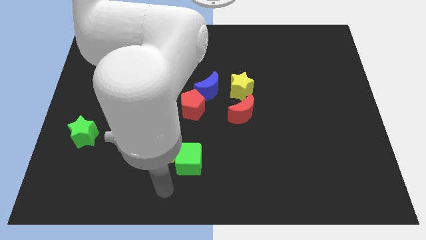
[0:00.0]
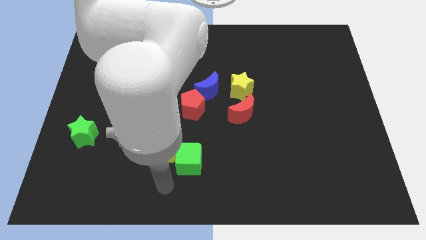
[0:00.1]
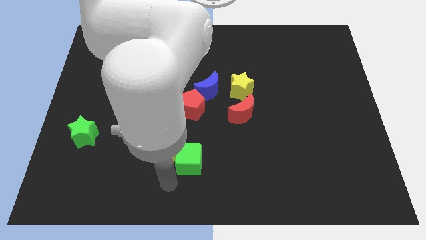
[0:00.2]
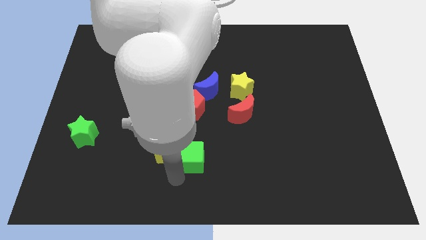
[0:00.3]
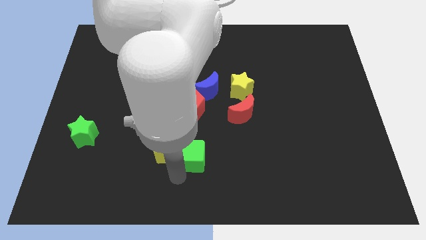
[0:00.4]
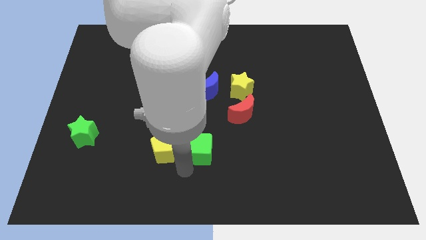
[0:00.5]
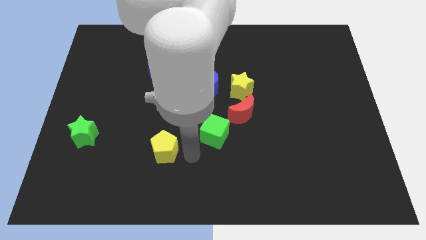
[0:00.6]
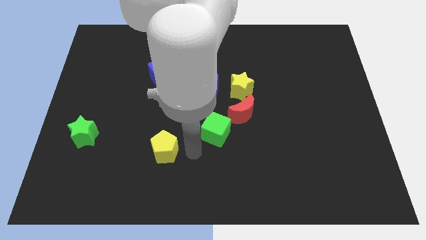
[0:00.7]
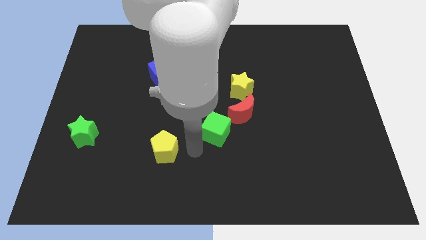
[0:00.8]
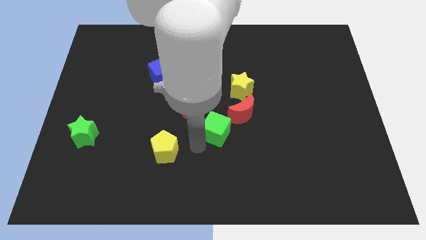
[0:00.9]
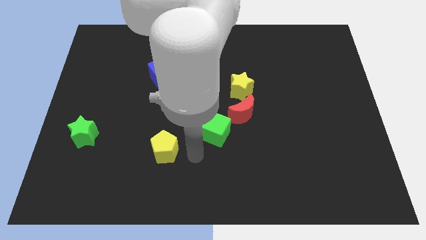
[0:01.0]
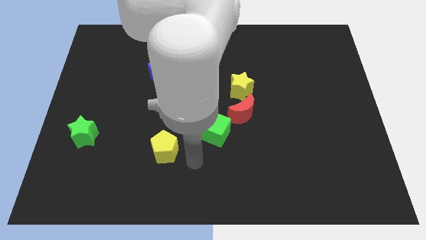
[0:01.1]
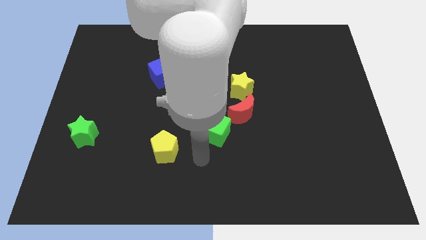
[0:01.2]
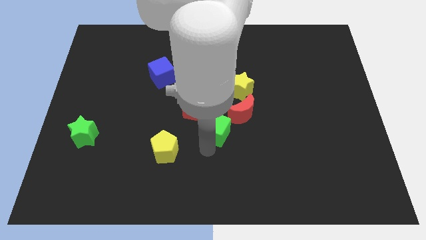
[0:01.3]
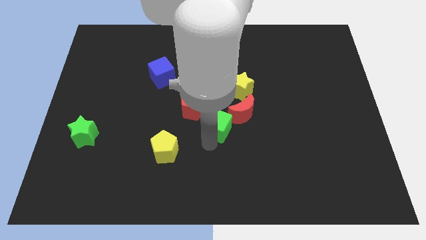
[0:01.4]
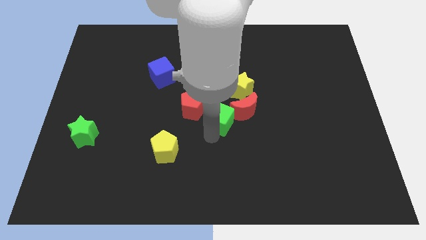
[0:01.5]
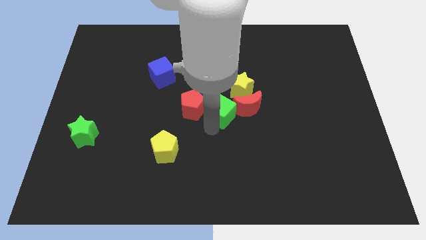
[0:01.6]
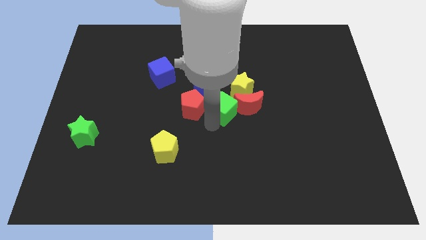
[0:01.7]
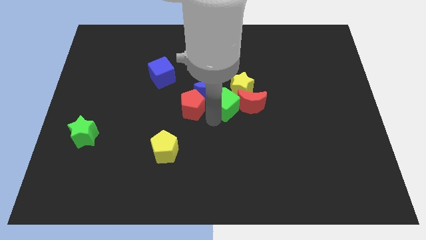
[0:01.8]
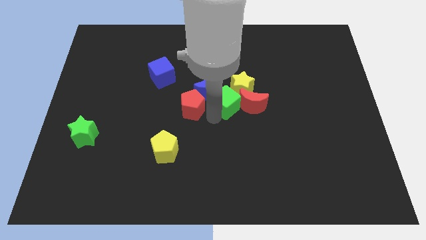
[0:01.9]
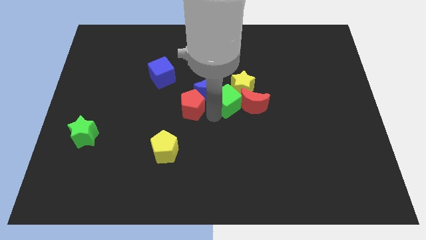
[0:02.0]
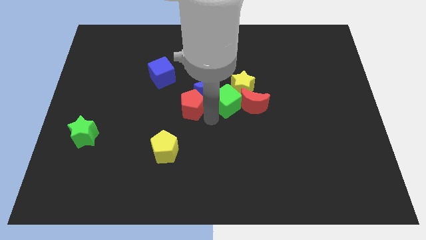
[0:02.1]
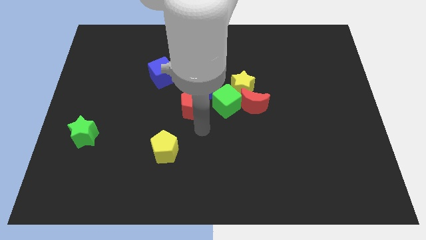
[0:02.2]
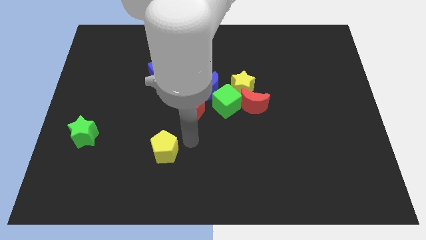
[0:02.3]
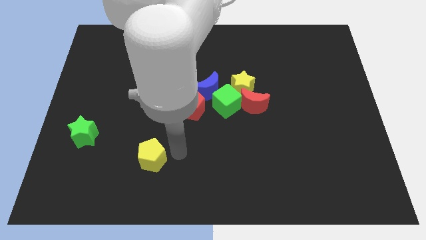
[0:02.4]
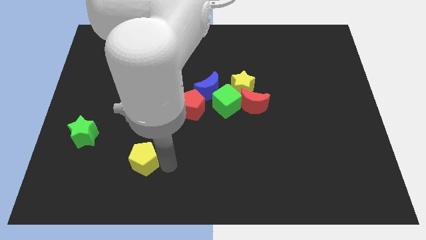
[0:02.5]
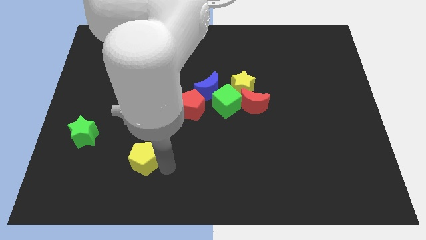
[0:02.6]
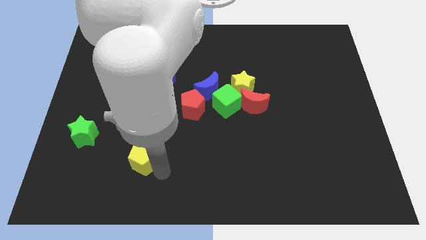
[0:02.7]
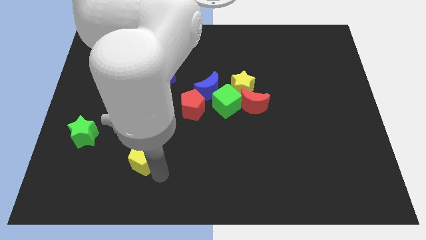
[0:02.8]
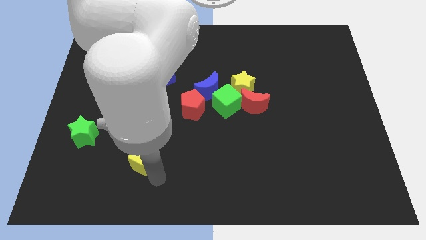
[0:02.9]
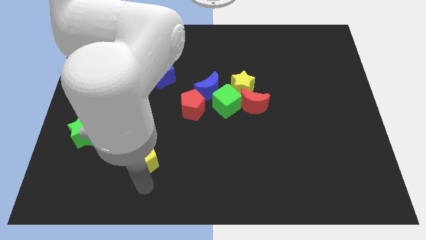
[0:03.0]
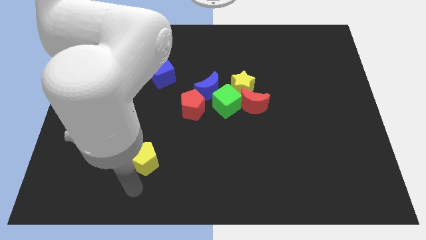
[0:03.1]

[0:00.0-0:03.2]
separate the green cube and yellow pentagon

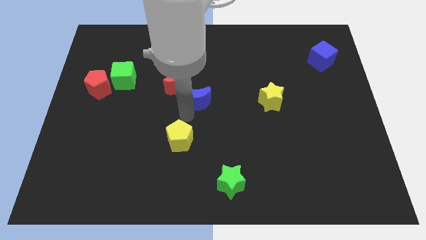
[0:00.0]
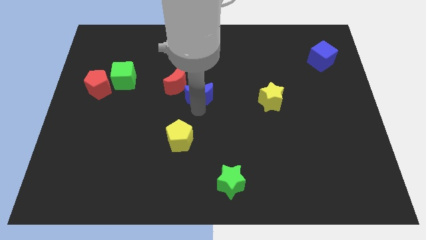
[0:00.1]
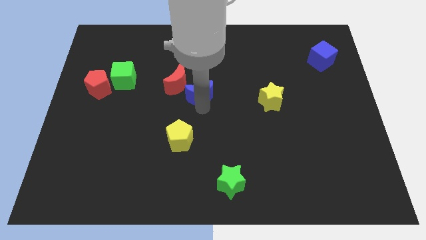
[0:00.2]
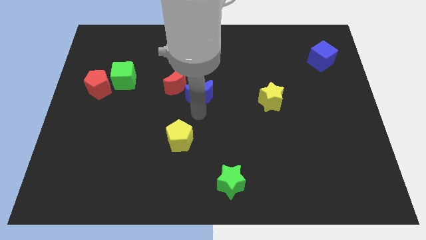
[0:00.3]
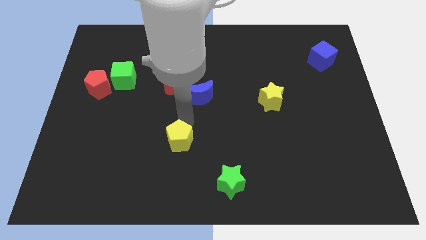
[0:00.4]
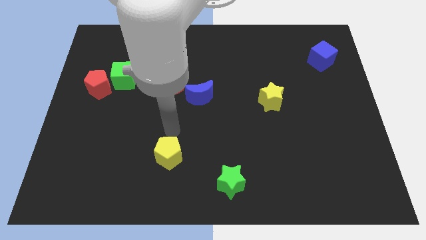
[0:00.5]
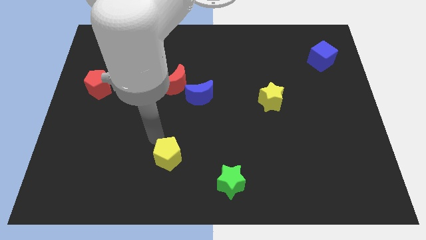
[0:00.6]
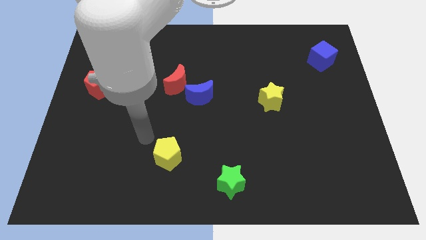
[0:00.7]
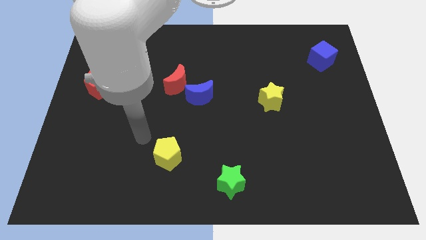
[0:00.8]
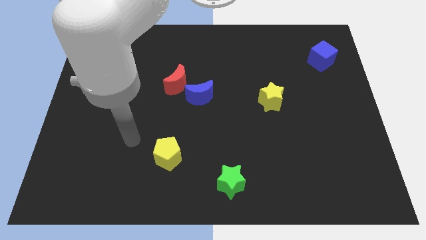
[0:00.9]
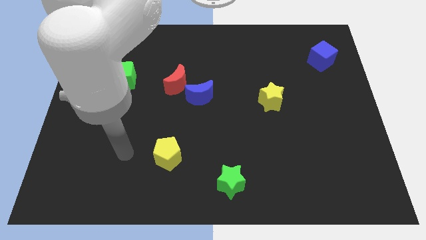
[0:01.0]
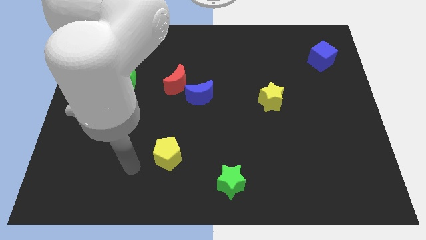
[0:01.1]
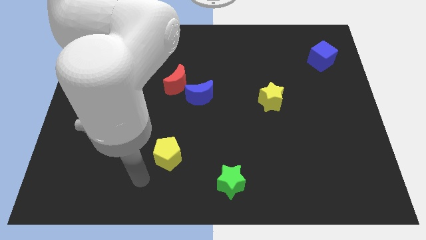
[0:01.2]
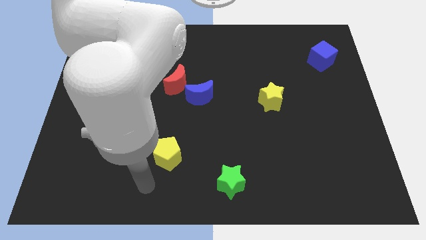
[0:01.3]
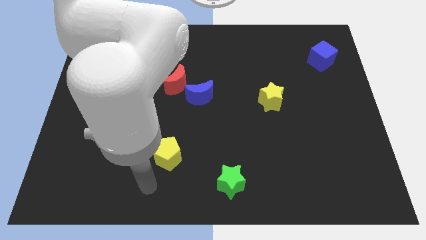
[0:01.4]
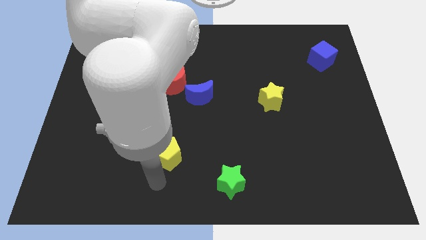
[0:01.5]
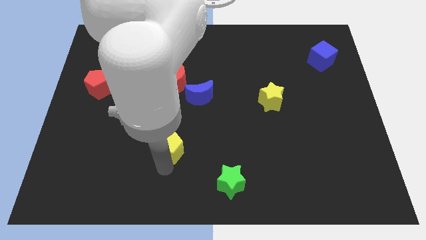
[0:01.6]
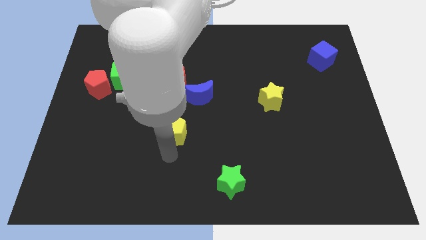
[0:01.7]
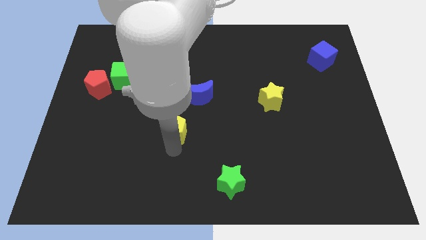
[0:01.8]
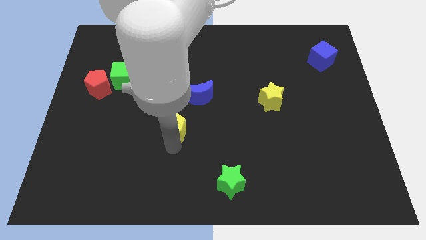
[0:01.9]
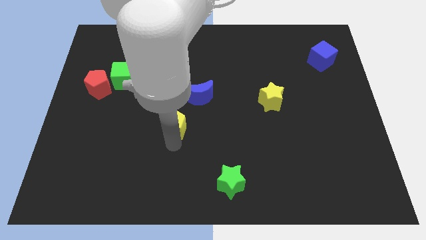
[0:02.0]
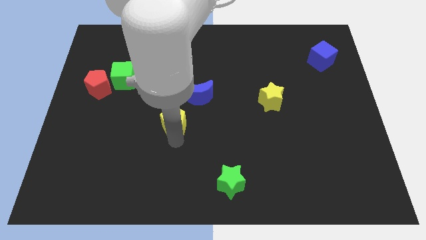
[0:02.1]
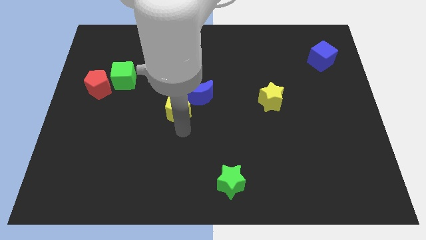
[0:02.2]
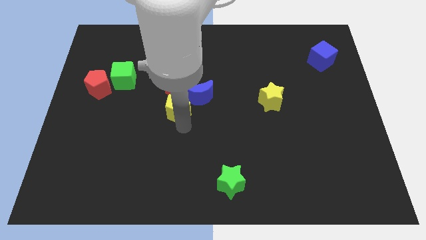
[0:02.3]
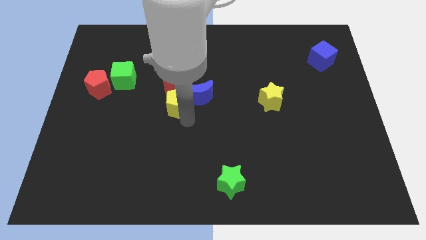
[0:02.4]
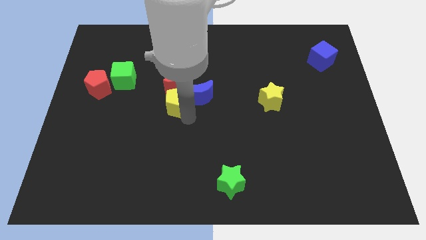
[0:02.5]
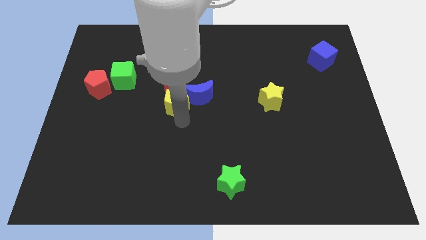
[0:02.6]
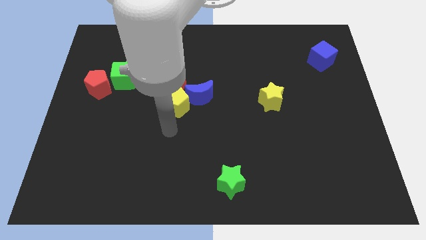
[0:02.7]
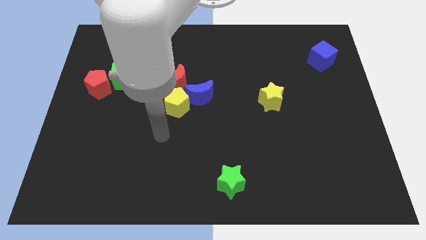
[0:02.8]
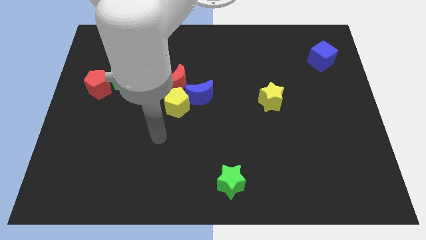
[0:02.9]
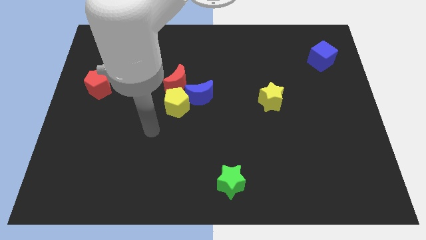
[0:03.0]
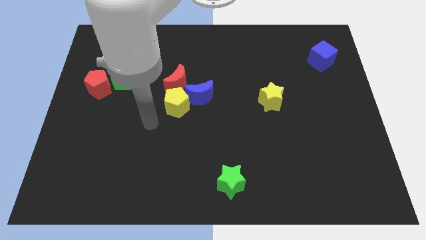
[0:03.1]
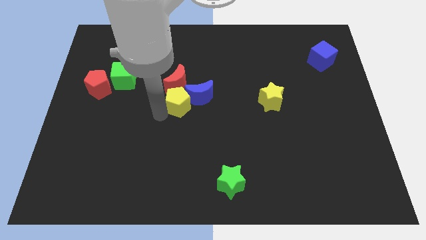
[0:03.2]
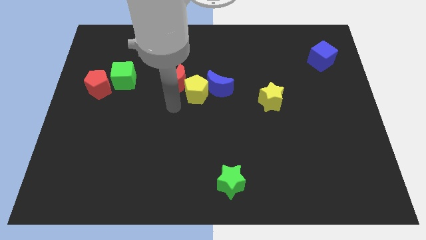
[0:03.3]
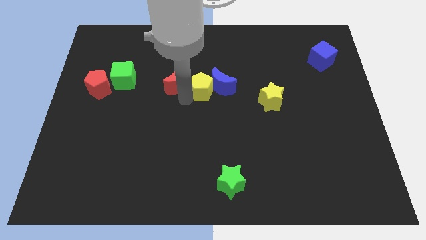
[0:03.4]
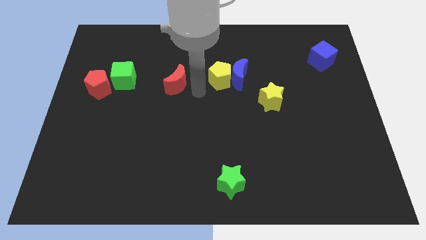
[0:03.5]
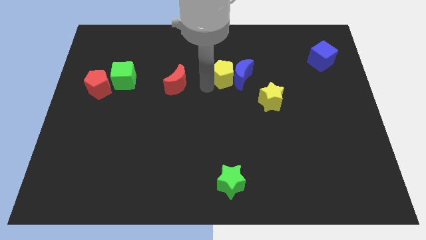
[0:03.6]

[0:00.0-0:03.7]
push yellow pentagon to the right side of red crescent

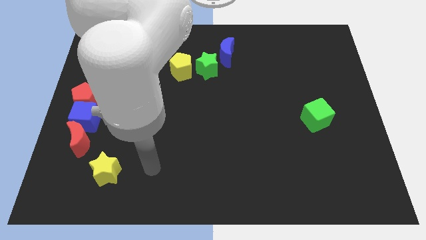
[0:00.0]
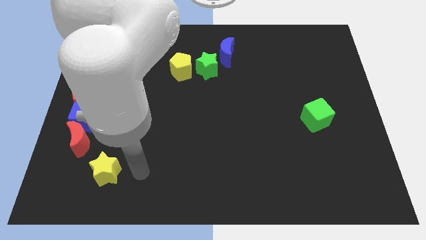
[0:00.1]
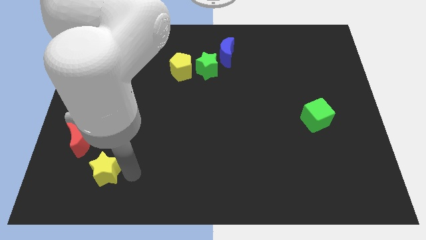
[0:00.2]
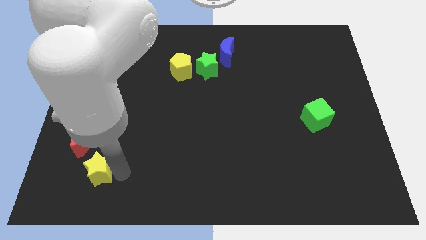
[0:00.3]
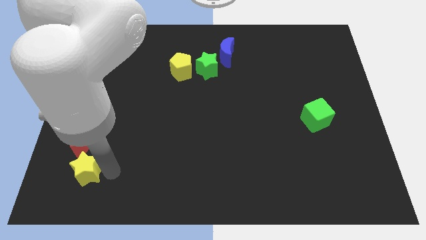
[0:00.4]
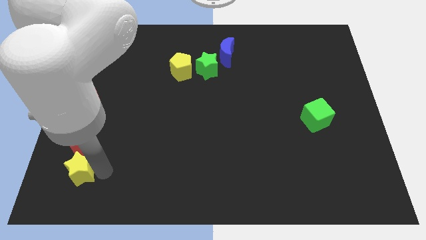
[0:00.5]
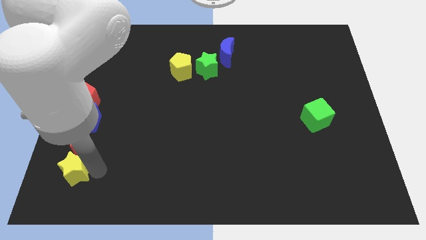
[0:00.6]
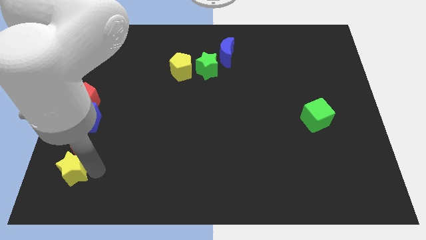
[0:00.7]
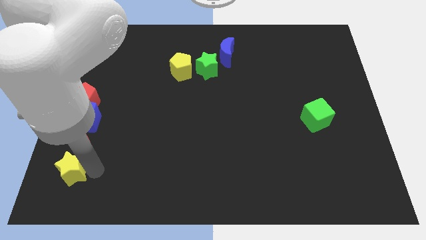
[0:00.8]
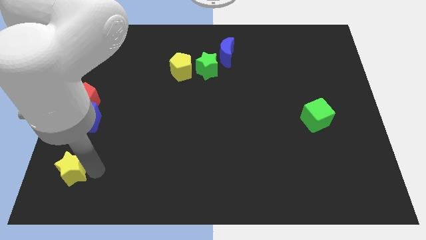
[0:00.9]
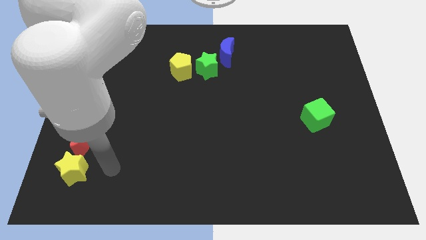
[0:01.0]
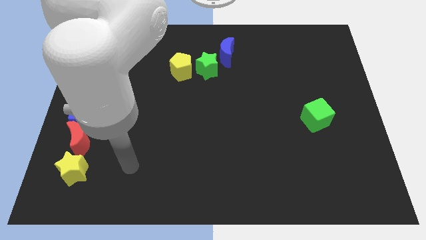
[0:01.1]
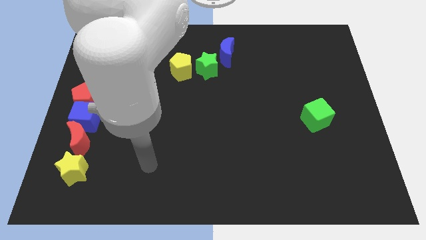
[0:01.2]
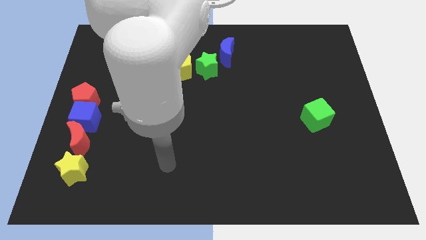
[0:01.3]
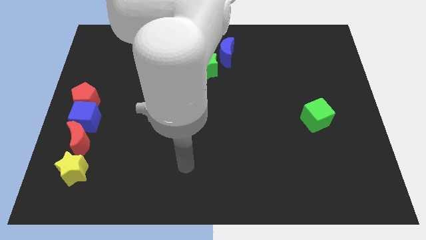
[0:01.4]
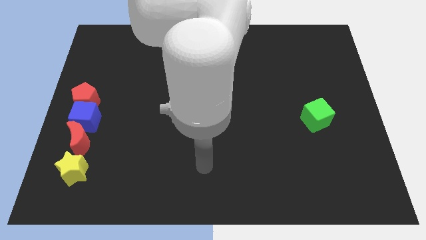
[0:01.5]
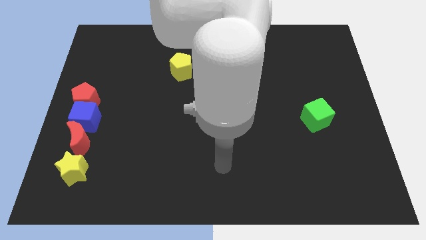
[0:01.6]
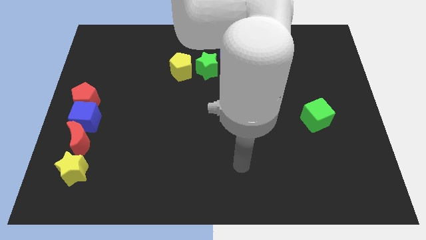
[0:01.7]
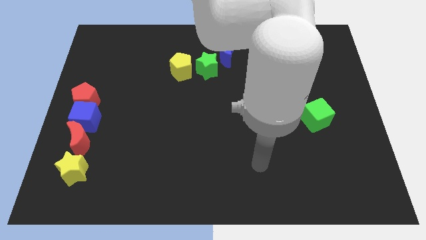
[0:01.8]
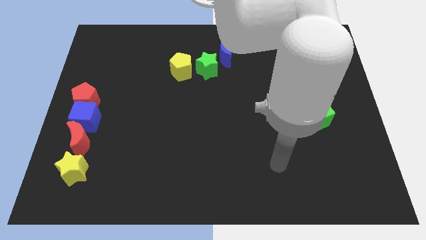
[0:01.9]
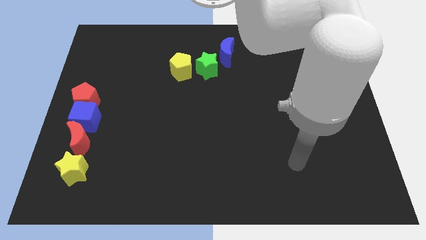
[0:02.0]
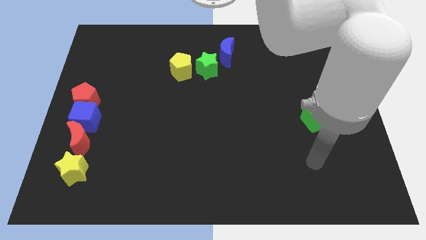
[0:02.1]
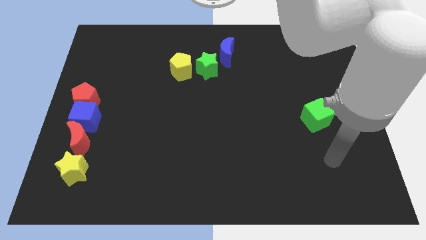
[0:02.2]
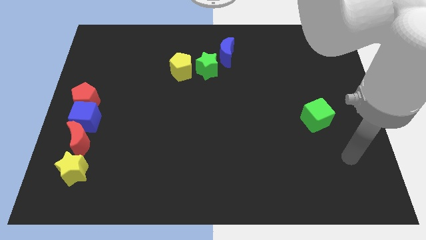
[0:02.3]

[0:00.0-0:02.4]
place the yellow star under the red crescent
